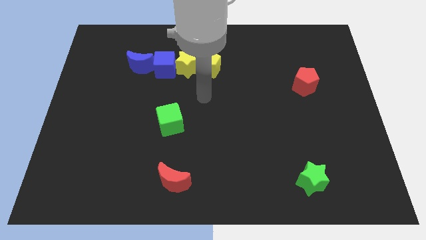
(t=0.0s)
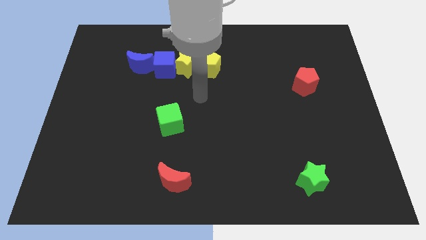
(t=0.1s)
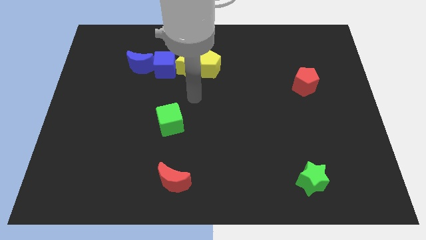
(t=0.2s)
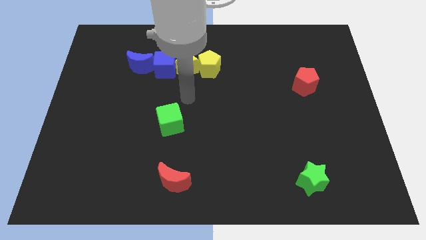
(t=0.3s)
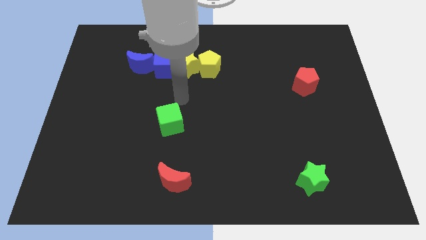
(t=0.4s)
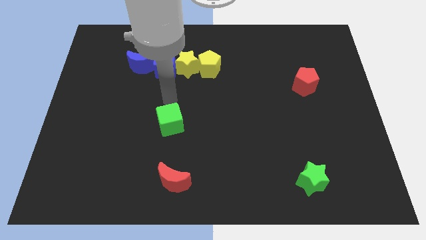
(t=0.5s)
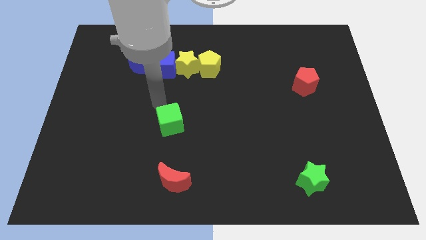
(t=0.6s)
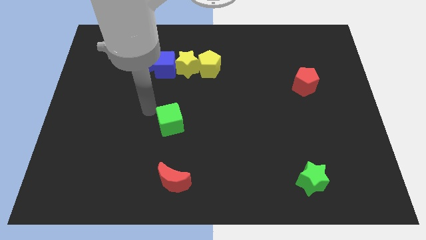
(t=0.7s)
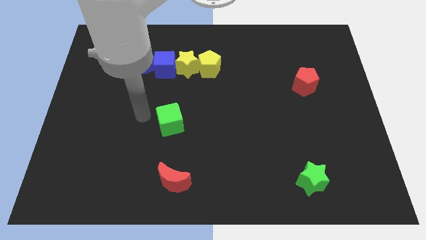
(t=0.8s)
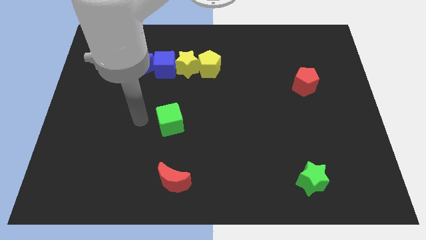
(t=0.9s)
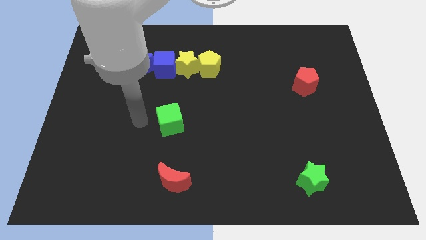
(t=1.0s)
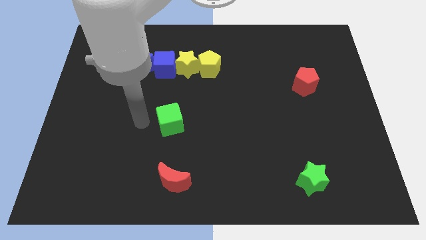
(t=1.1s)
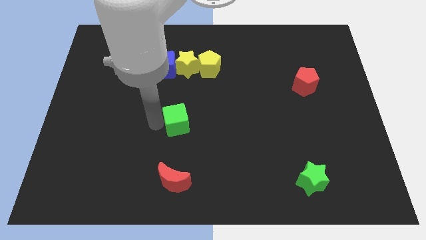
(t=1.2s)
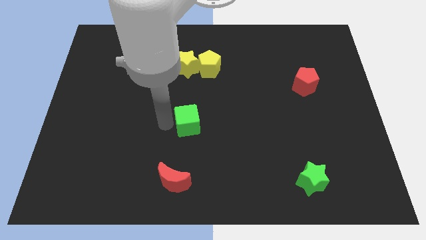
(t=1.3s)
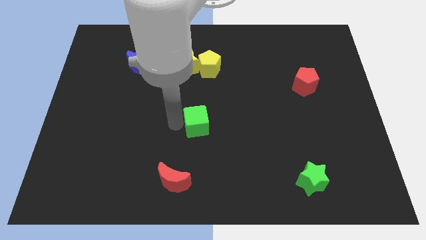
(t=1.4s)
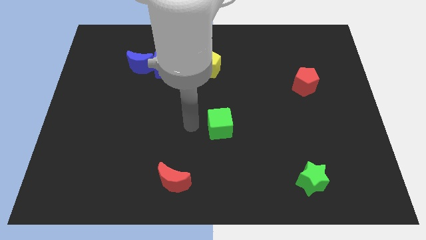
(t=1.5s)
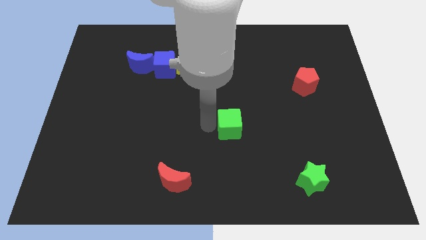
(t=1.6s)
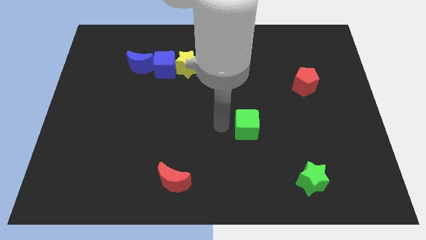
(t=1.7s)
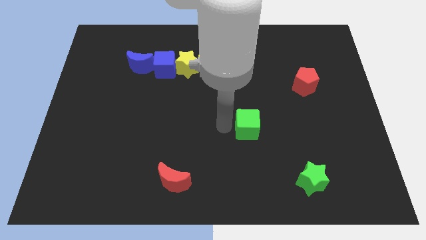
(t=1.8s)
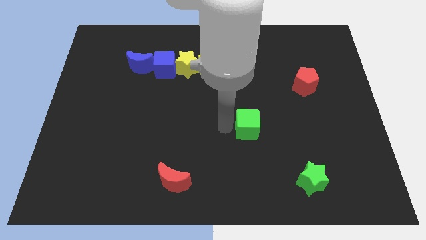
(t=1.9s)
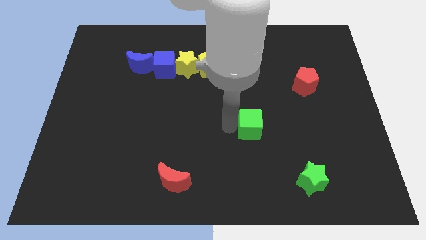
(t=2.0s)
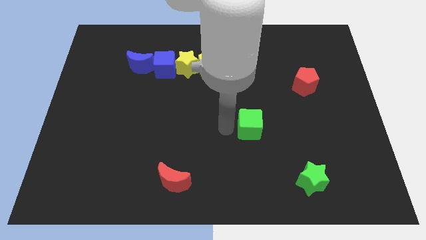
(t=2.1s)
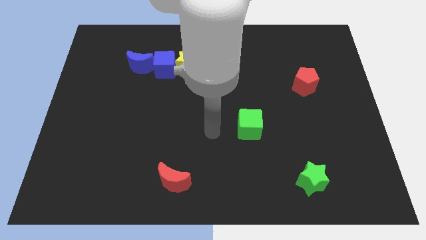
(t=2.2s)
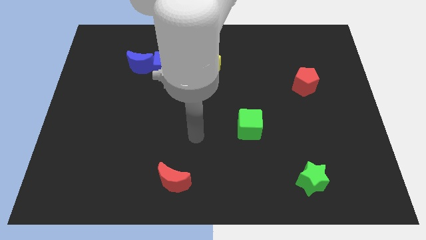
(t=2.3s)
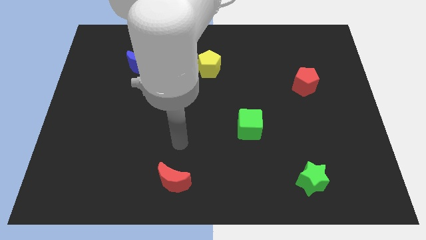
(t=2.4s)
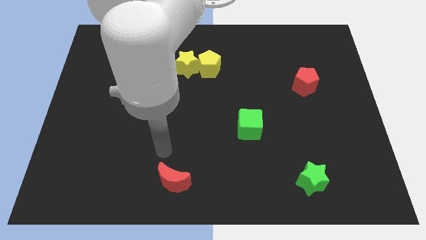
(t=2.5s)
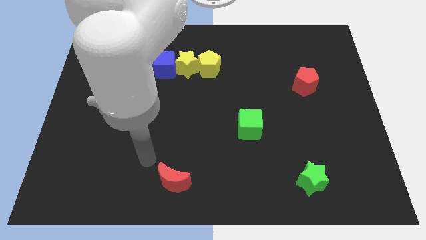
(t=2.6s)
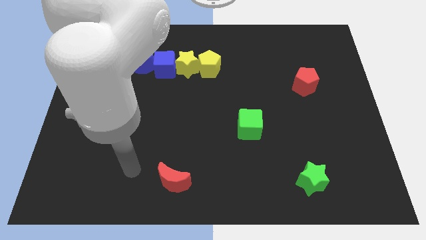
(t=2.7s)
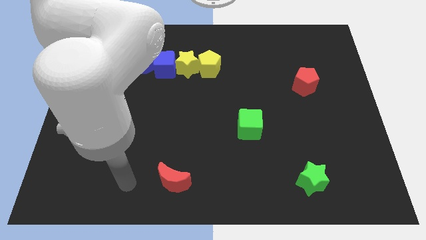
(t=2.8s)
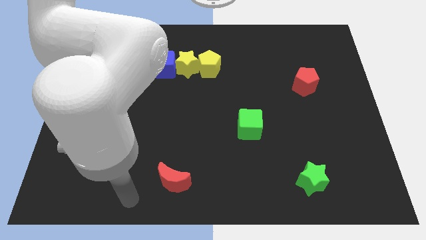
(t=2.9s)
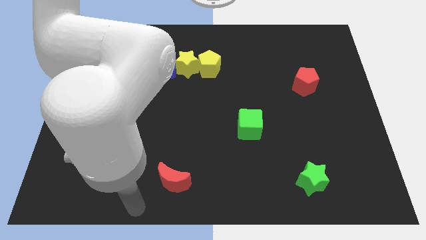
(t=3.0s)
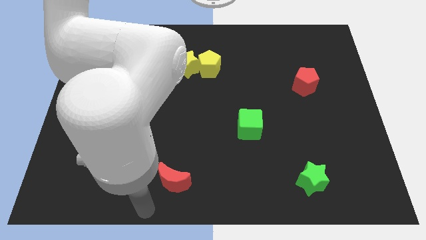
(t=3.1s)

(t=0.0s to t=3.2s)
place the green cube diagonally to green star

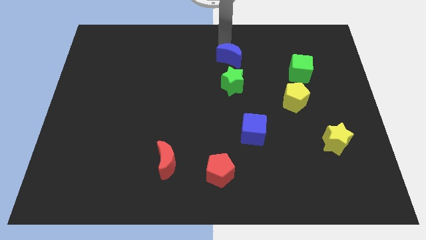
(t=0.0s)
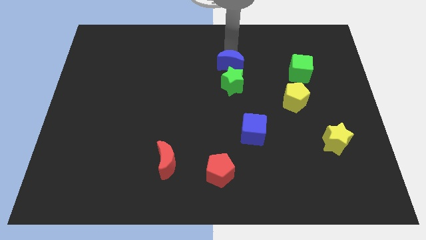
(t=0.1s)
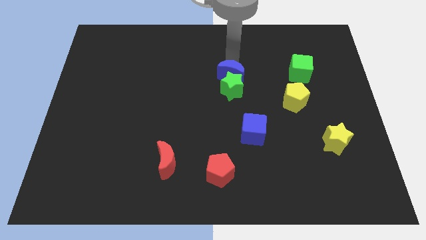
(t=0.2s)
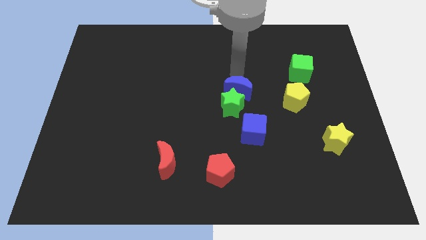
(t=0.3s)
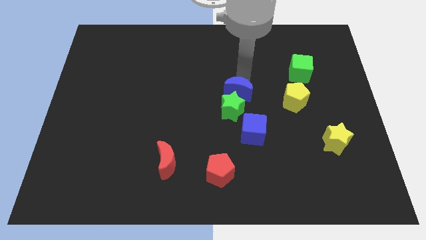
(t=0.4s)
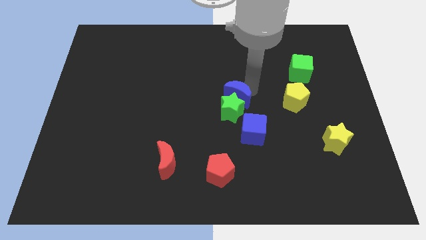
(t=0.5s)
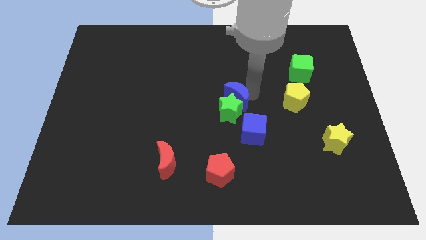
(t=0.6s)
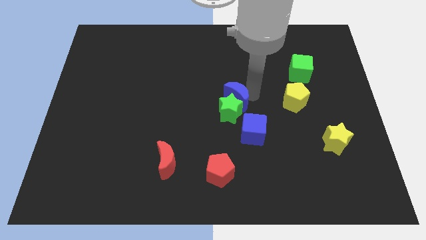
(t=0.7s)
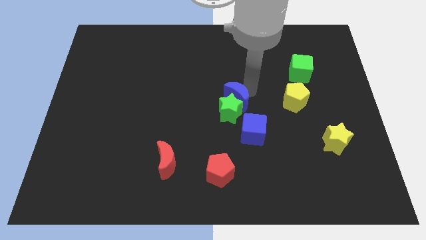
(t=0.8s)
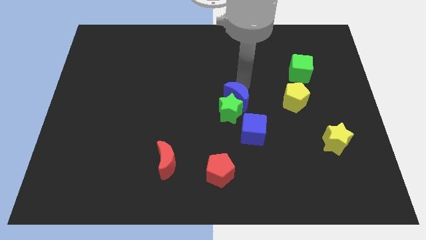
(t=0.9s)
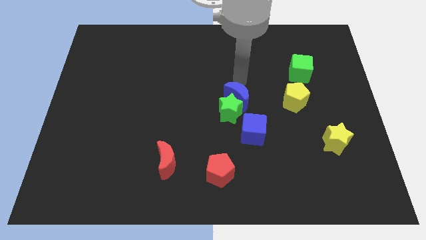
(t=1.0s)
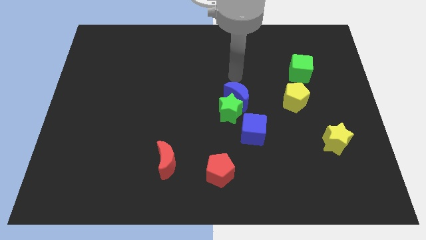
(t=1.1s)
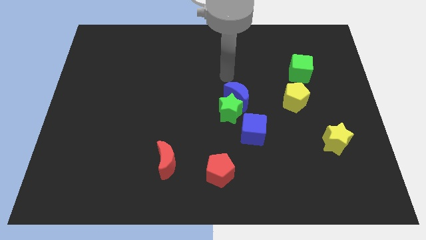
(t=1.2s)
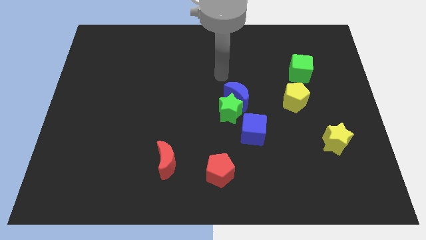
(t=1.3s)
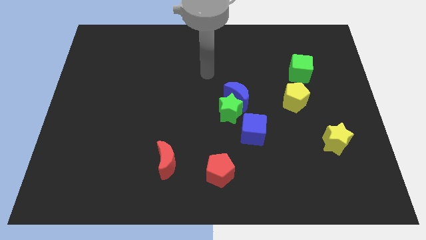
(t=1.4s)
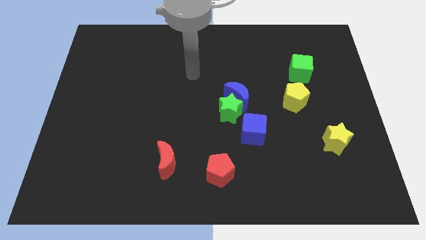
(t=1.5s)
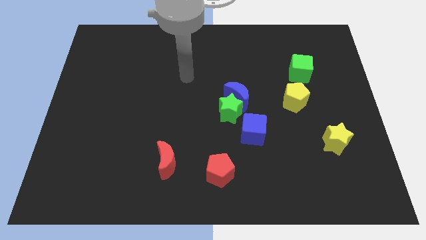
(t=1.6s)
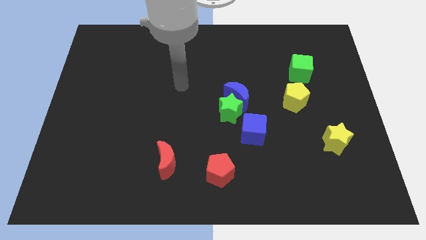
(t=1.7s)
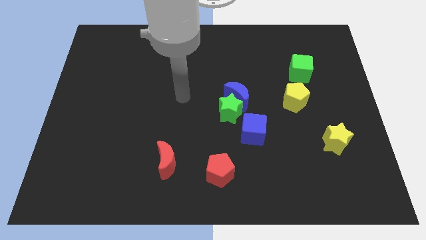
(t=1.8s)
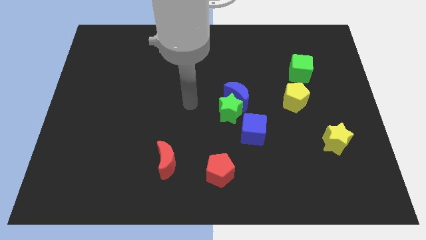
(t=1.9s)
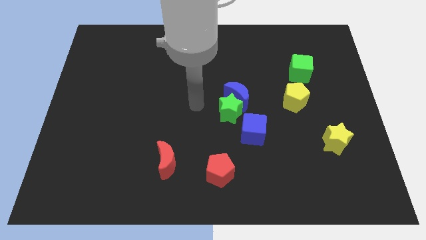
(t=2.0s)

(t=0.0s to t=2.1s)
slide the blue moon into the green star

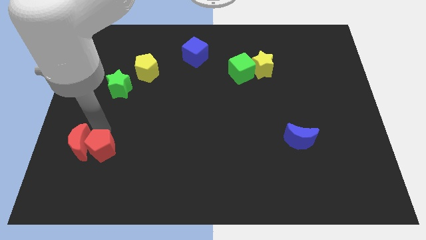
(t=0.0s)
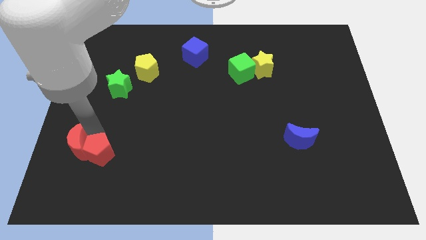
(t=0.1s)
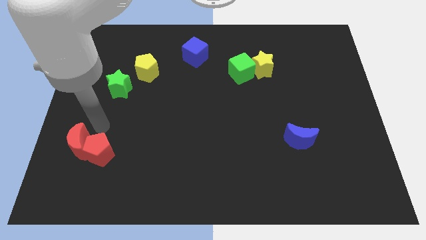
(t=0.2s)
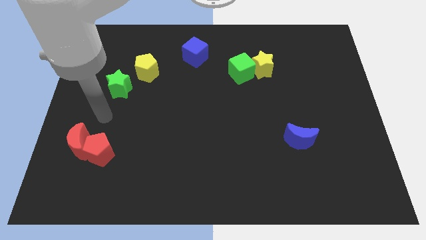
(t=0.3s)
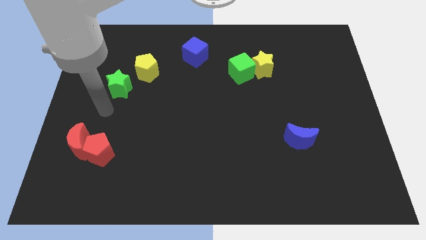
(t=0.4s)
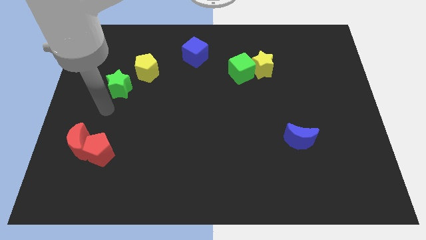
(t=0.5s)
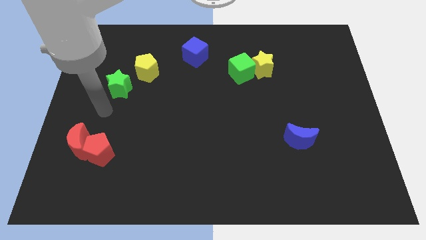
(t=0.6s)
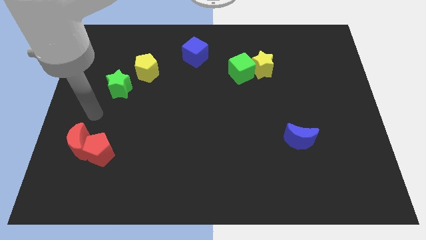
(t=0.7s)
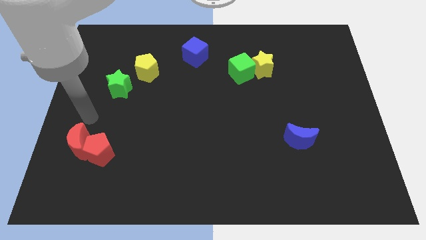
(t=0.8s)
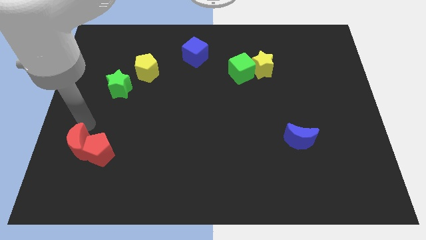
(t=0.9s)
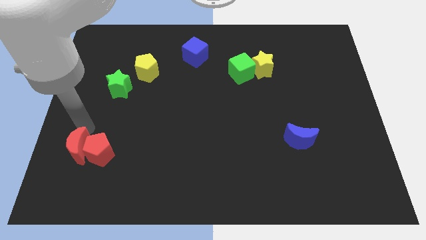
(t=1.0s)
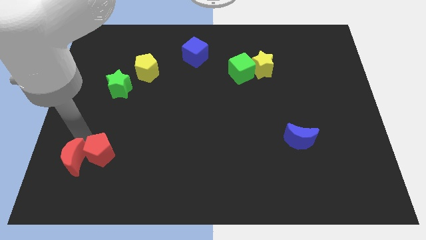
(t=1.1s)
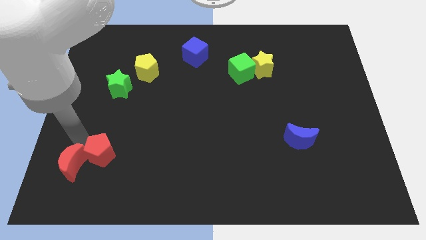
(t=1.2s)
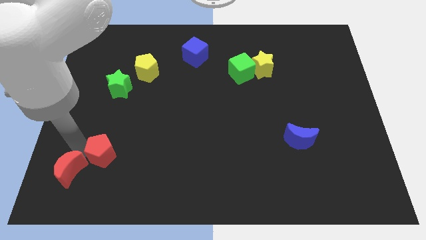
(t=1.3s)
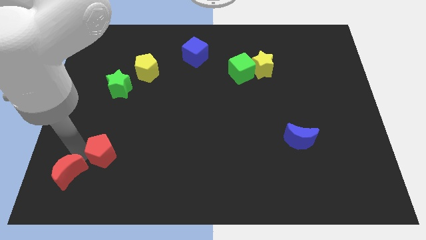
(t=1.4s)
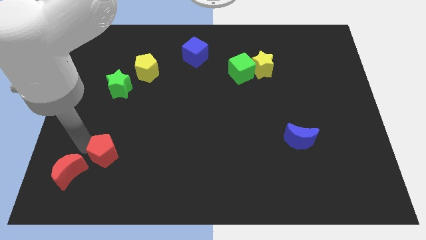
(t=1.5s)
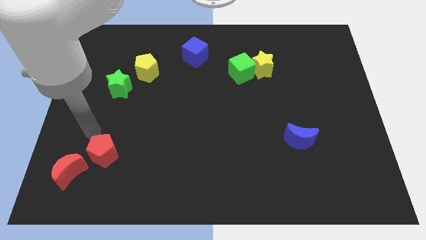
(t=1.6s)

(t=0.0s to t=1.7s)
separate red moon from red pentagon

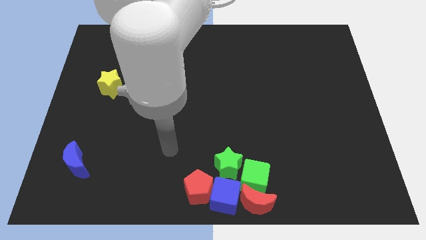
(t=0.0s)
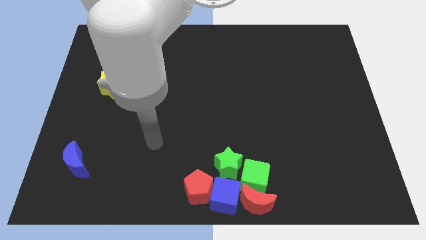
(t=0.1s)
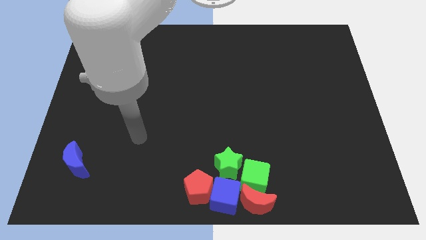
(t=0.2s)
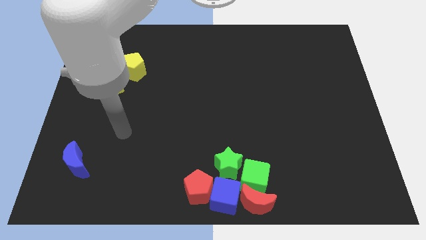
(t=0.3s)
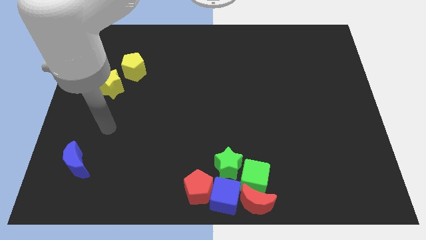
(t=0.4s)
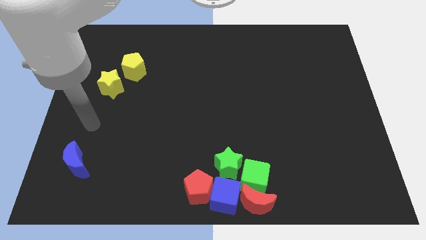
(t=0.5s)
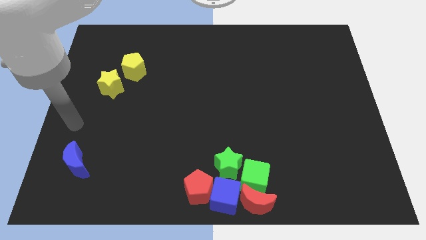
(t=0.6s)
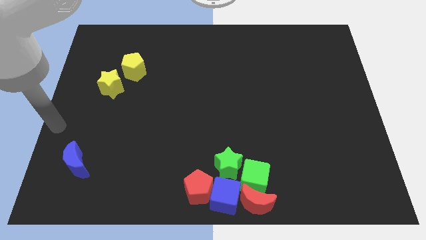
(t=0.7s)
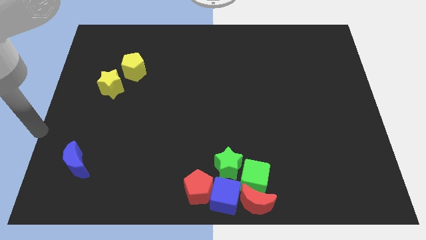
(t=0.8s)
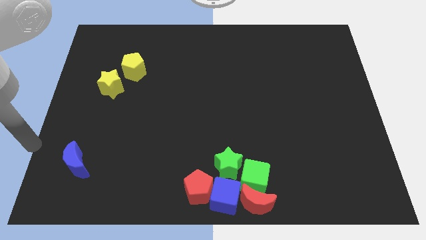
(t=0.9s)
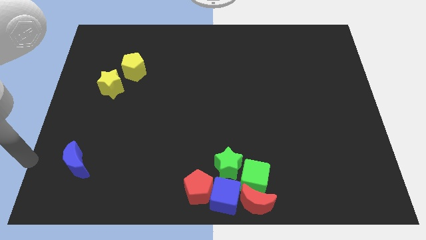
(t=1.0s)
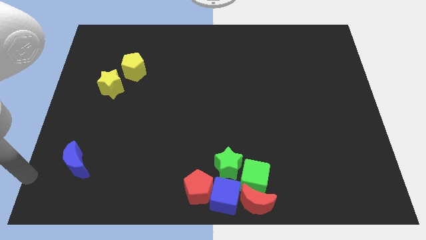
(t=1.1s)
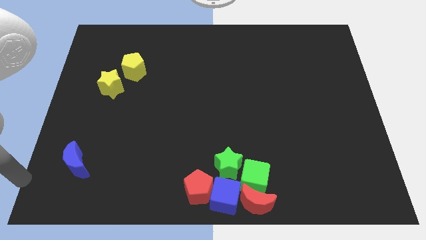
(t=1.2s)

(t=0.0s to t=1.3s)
place your arm to the left side of the blue moon

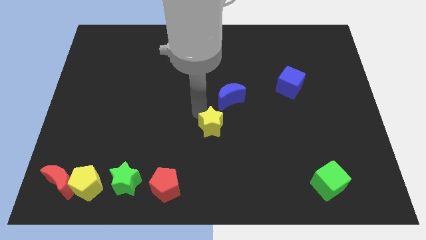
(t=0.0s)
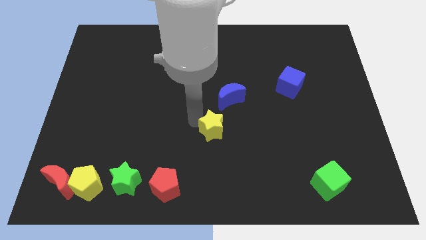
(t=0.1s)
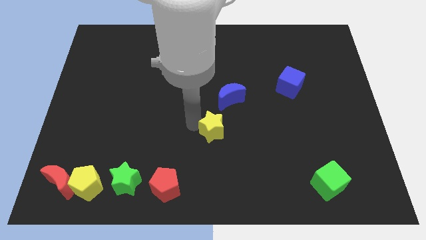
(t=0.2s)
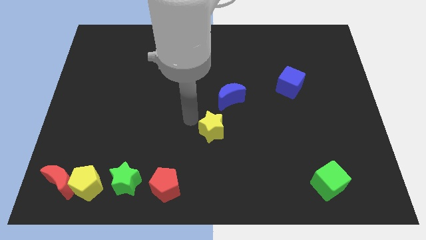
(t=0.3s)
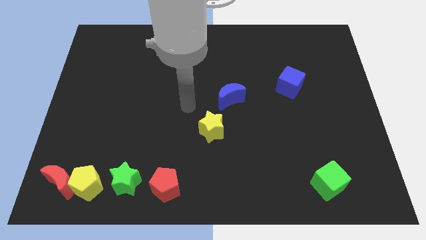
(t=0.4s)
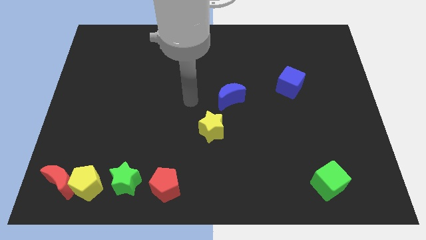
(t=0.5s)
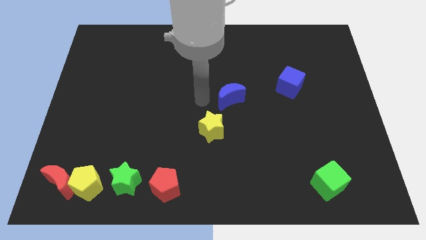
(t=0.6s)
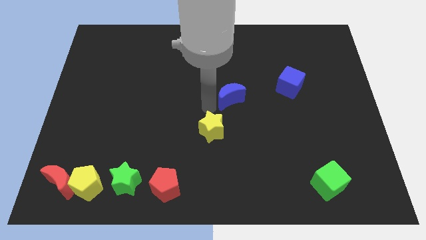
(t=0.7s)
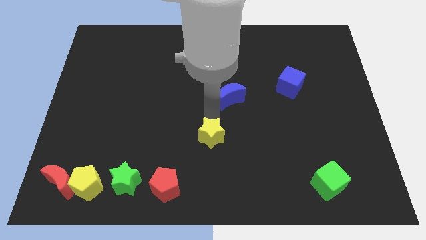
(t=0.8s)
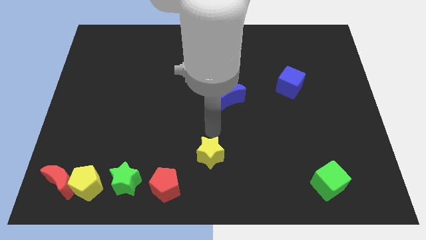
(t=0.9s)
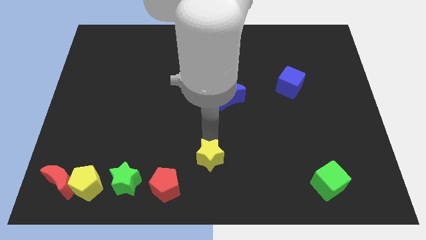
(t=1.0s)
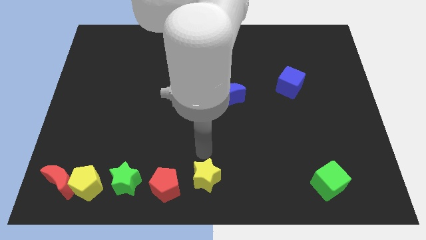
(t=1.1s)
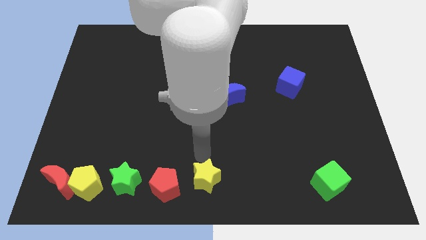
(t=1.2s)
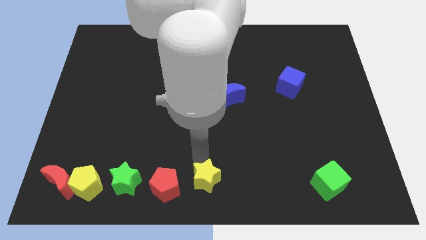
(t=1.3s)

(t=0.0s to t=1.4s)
push the yellow star to the right of the red pentagon
